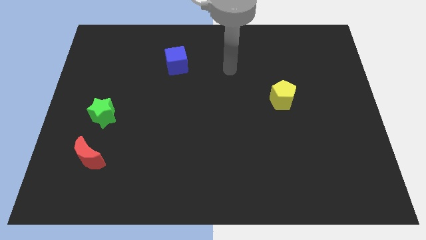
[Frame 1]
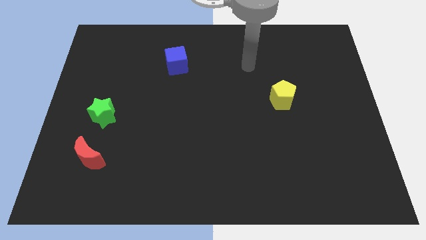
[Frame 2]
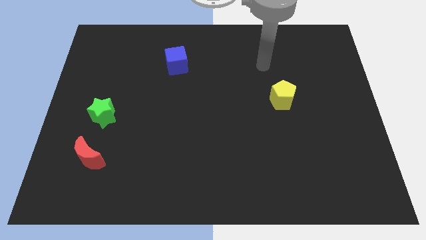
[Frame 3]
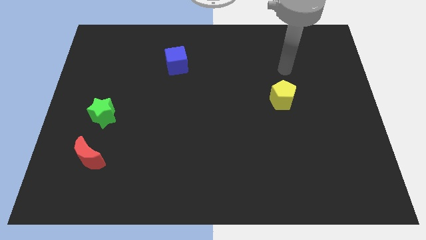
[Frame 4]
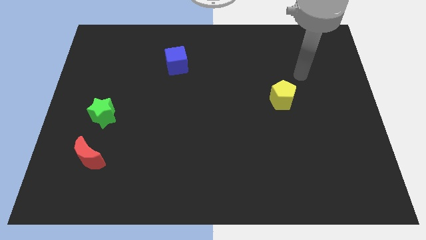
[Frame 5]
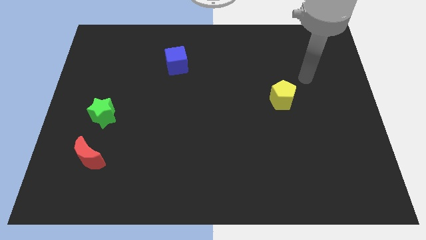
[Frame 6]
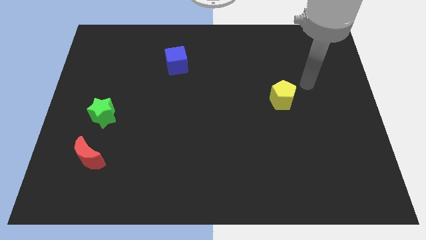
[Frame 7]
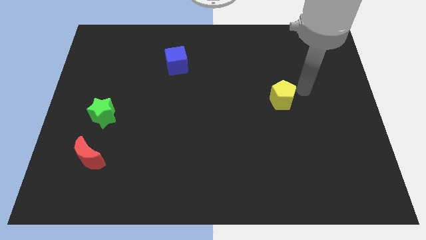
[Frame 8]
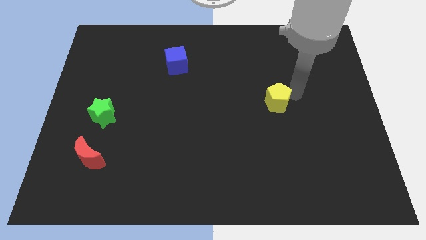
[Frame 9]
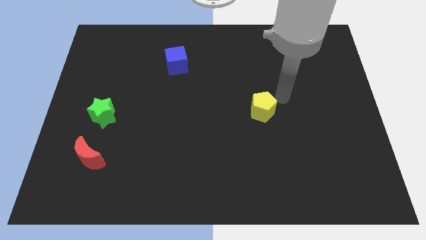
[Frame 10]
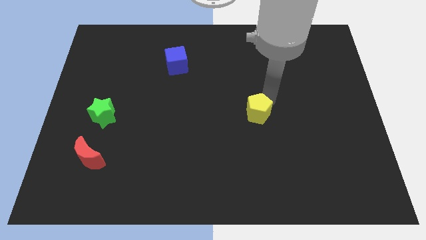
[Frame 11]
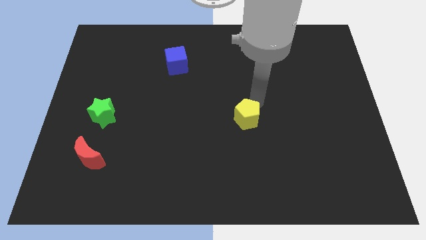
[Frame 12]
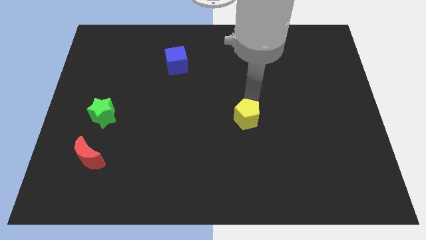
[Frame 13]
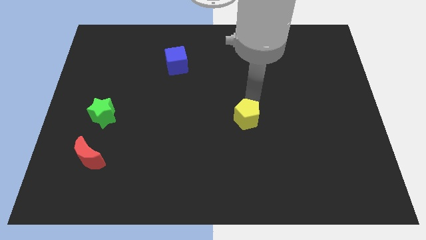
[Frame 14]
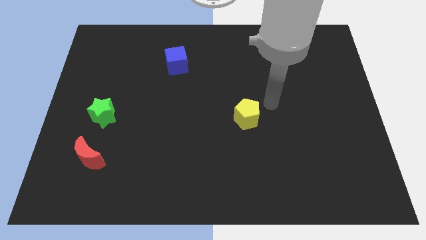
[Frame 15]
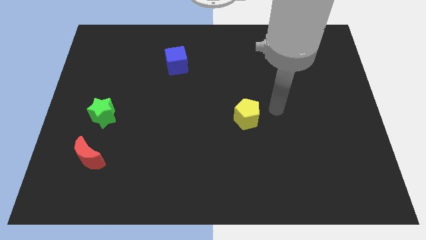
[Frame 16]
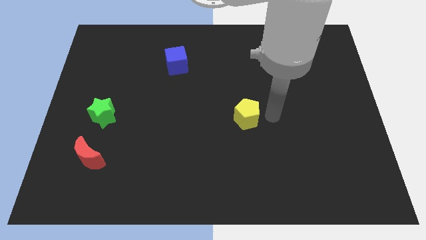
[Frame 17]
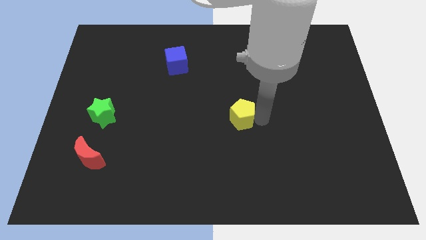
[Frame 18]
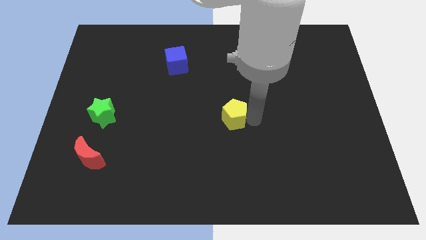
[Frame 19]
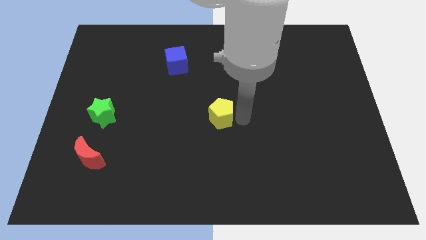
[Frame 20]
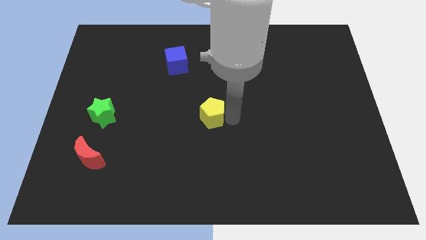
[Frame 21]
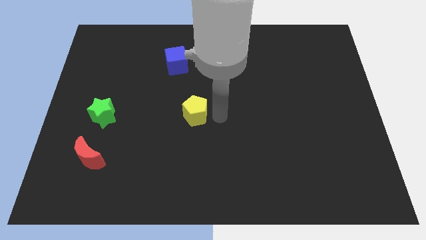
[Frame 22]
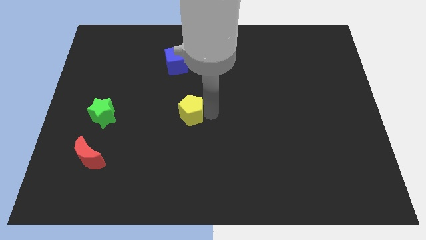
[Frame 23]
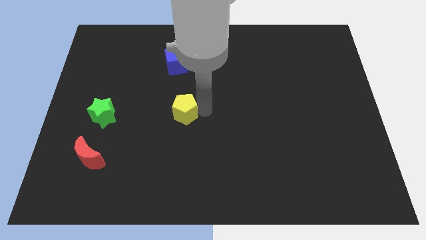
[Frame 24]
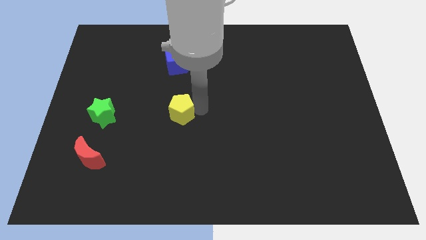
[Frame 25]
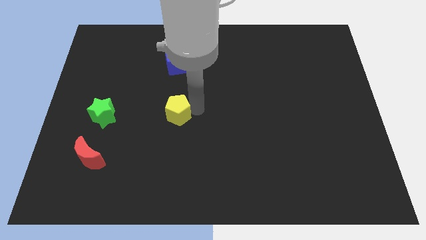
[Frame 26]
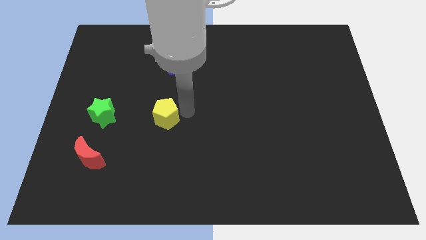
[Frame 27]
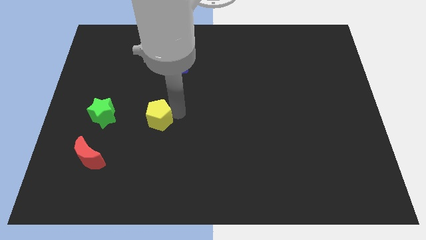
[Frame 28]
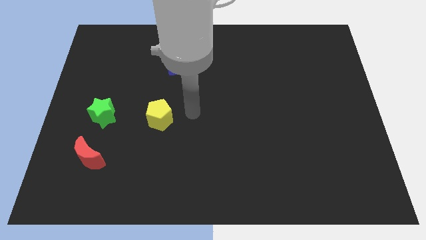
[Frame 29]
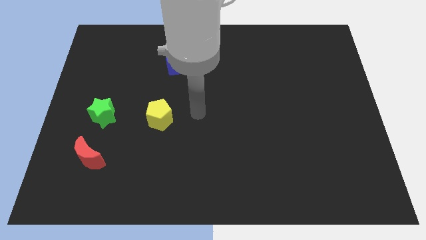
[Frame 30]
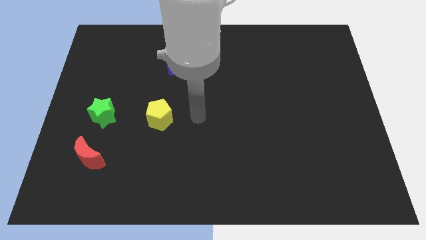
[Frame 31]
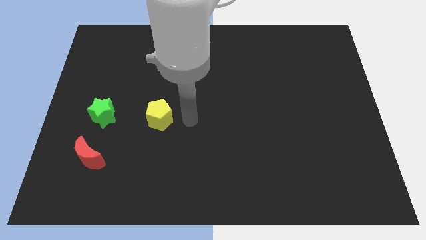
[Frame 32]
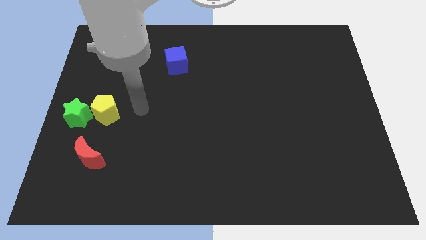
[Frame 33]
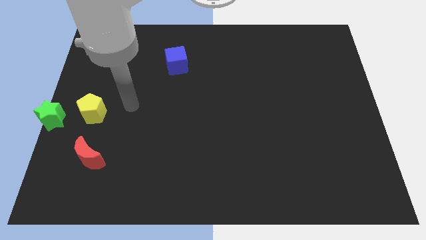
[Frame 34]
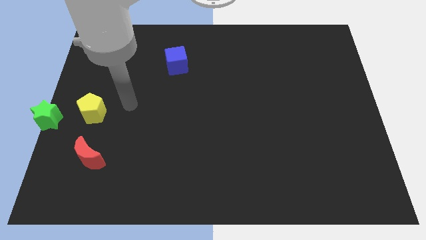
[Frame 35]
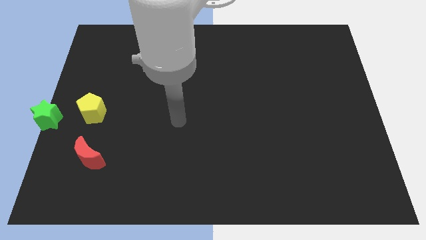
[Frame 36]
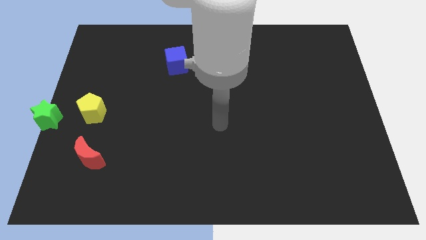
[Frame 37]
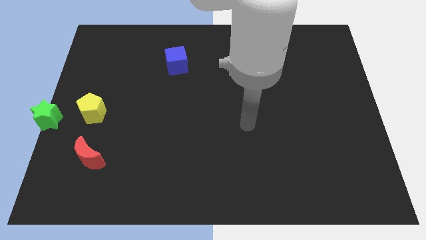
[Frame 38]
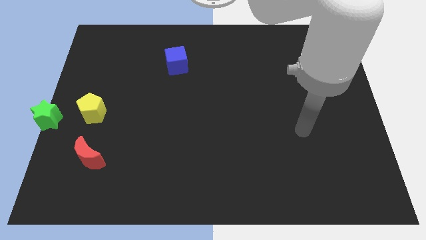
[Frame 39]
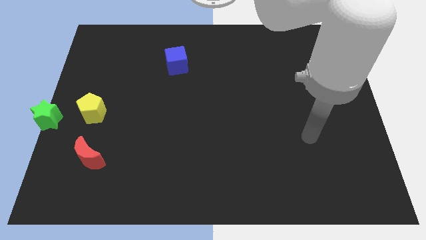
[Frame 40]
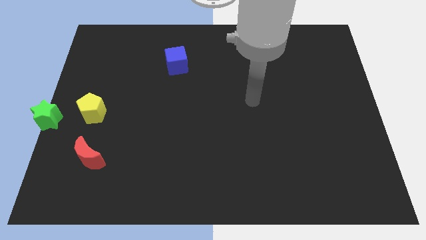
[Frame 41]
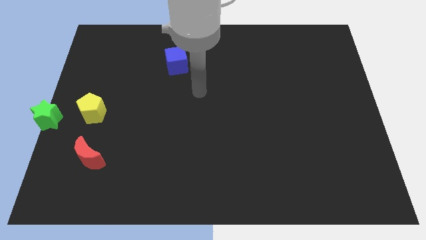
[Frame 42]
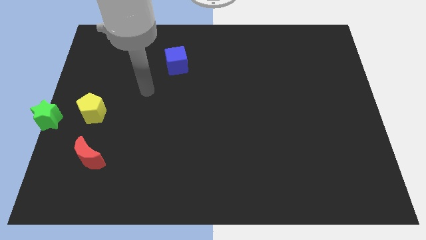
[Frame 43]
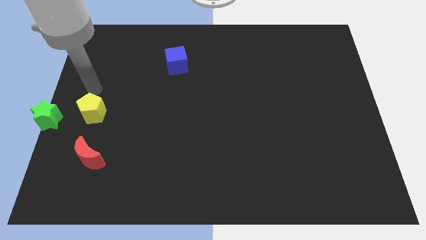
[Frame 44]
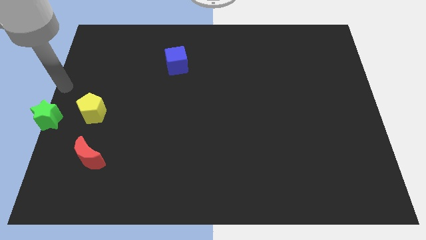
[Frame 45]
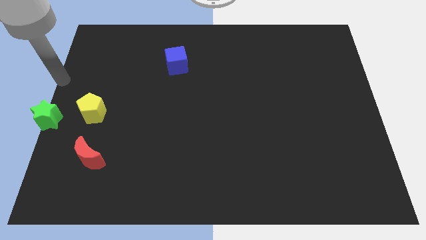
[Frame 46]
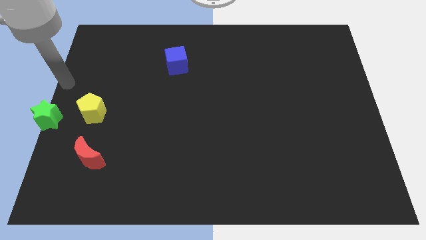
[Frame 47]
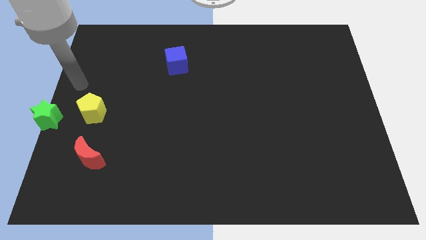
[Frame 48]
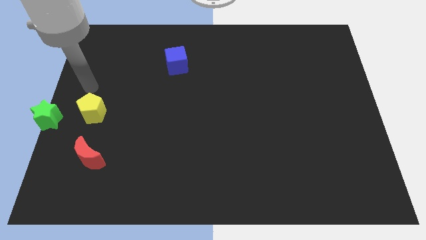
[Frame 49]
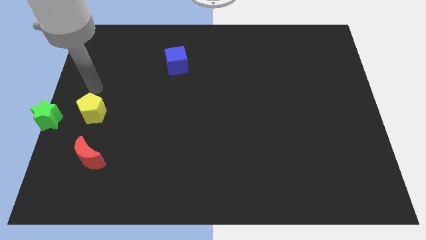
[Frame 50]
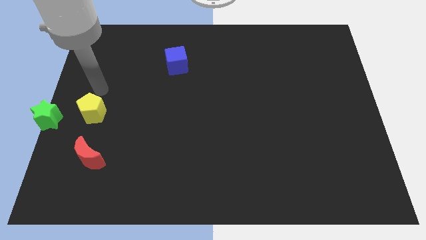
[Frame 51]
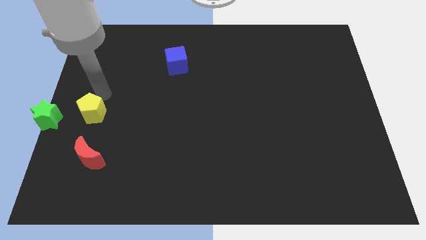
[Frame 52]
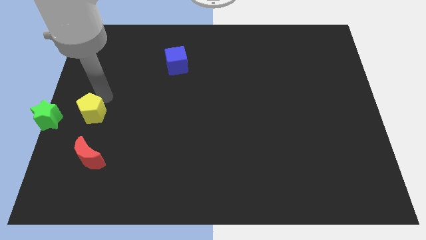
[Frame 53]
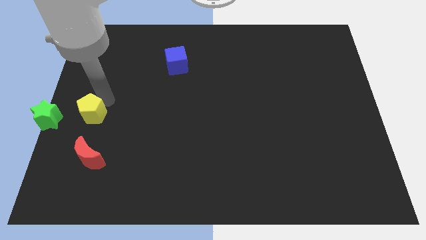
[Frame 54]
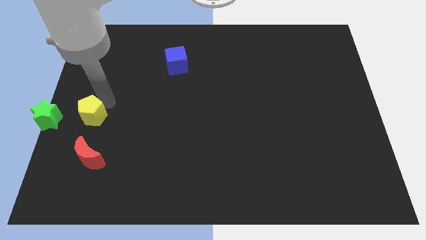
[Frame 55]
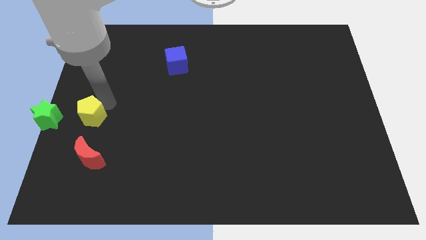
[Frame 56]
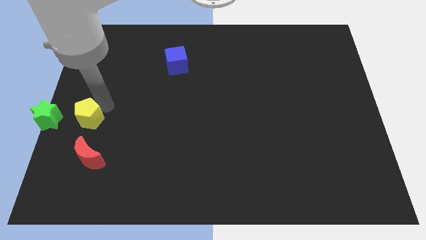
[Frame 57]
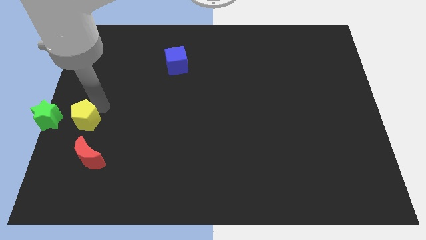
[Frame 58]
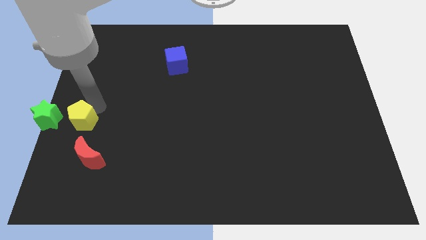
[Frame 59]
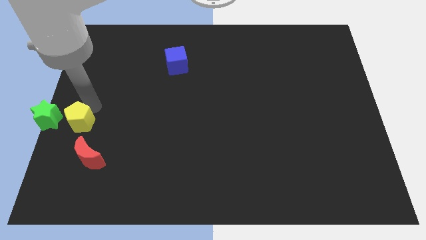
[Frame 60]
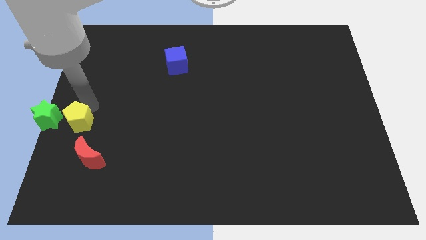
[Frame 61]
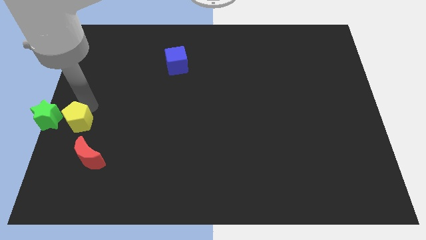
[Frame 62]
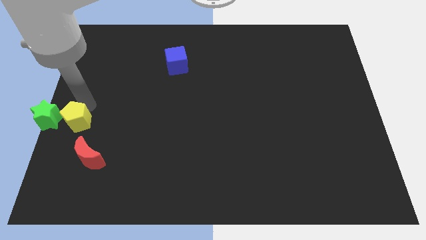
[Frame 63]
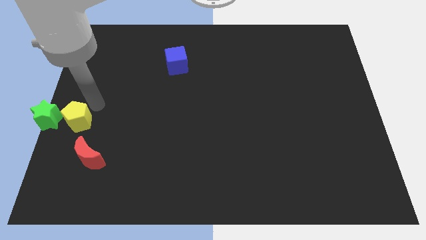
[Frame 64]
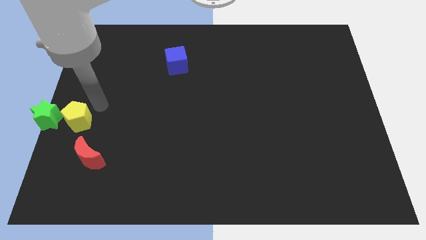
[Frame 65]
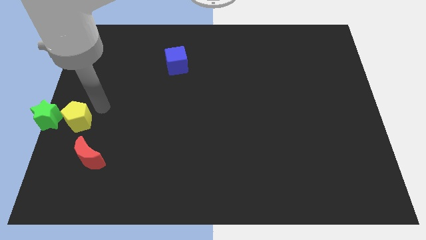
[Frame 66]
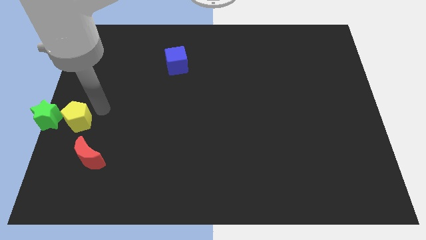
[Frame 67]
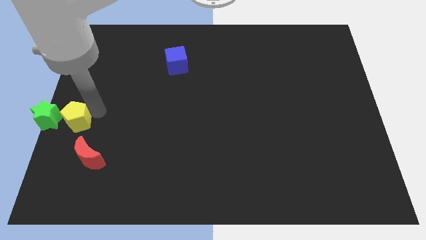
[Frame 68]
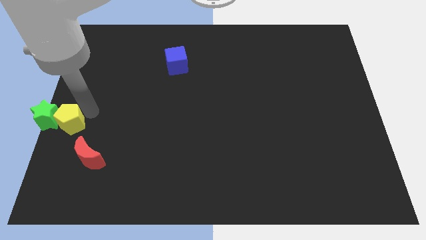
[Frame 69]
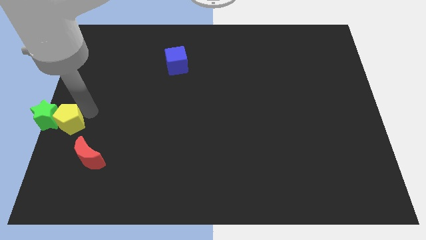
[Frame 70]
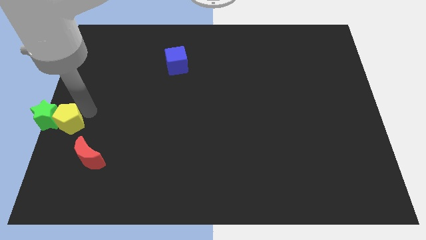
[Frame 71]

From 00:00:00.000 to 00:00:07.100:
put the yellow block next to the star

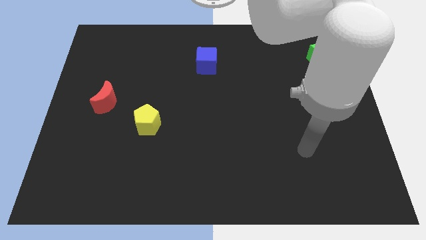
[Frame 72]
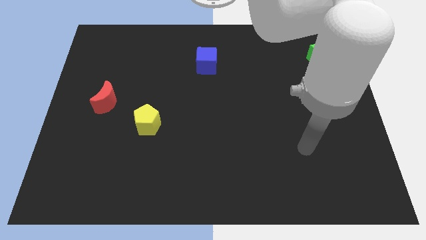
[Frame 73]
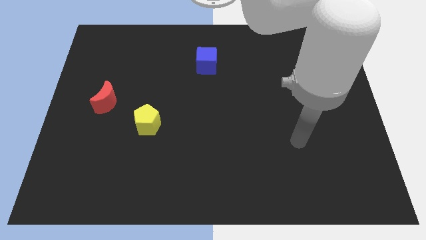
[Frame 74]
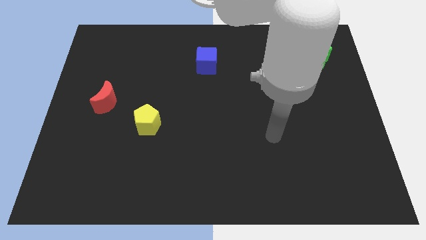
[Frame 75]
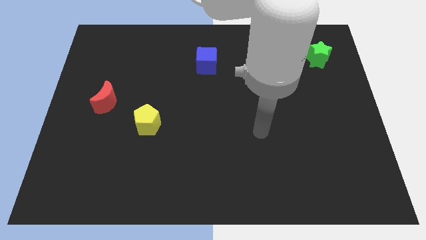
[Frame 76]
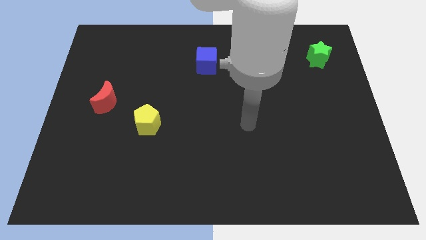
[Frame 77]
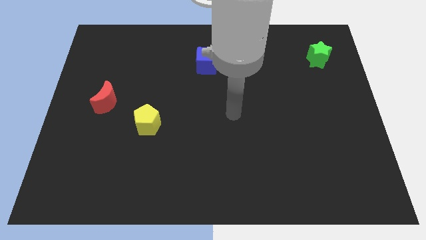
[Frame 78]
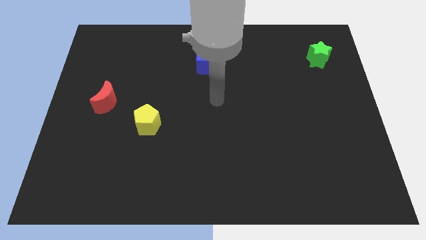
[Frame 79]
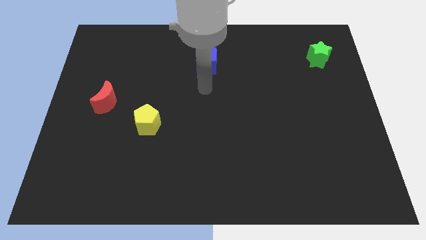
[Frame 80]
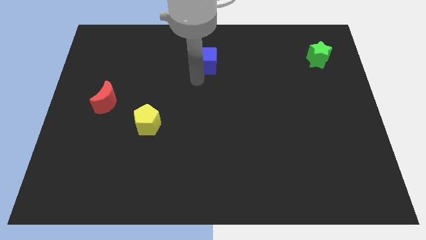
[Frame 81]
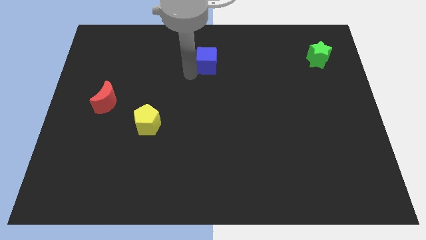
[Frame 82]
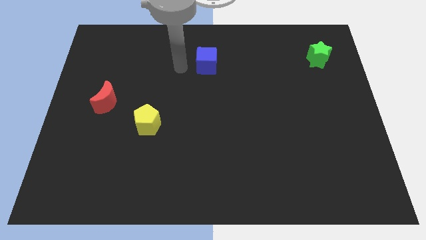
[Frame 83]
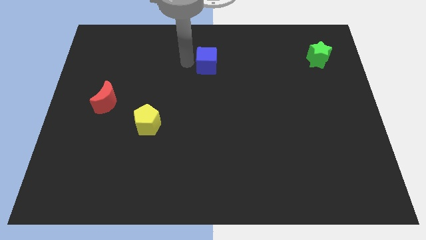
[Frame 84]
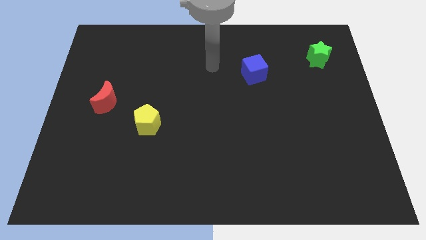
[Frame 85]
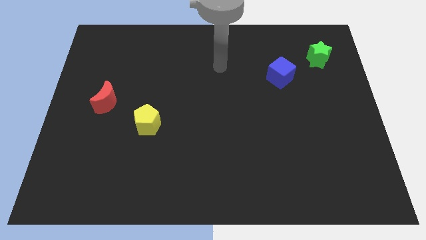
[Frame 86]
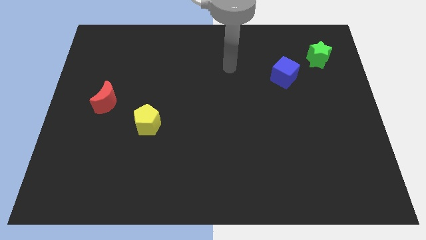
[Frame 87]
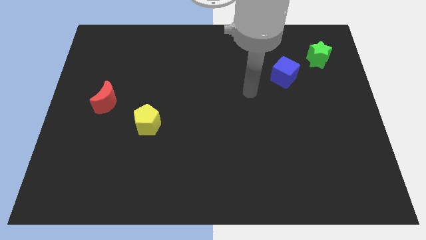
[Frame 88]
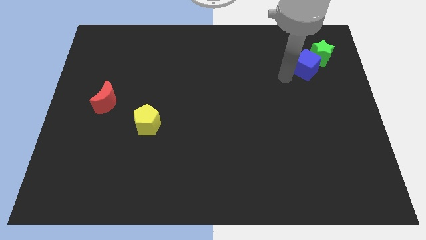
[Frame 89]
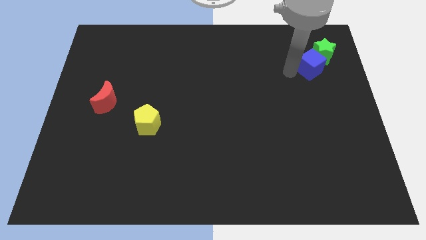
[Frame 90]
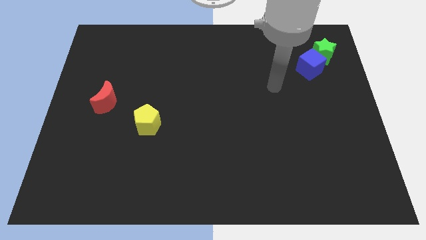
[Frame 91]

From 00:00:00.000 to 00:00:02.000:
push the blue block next to the green star
